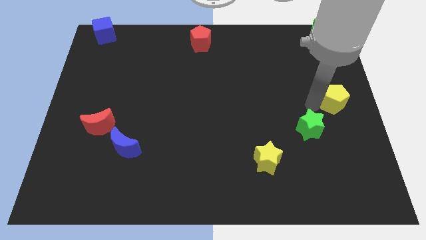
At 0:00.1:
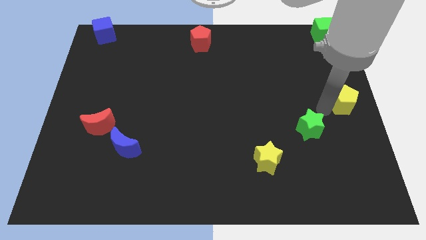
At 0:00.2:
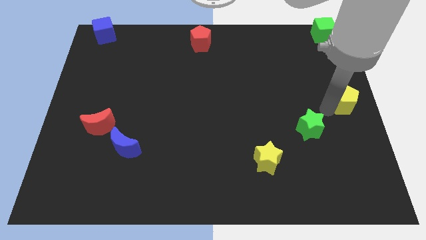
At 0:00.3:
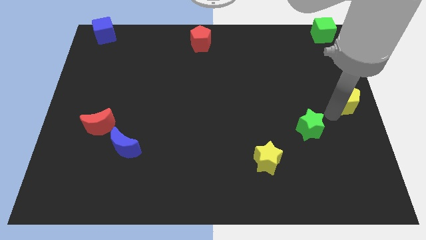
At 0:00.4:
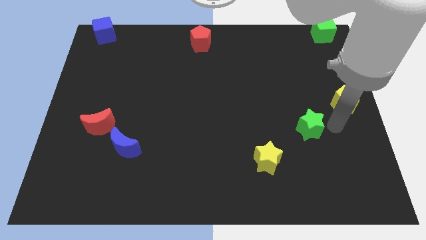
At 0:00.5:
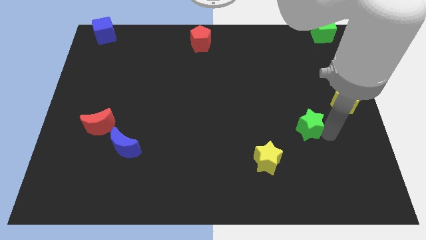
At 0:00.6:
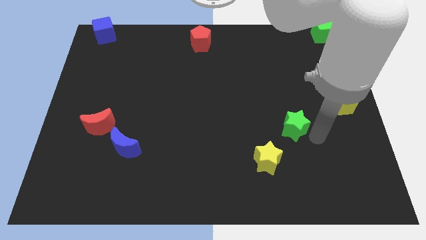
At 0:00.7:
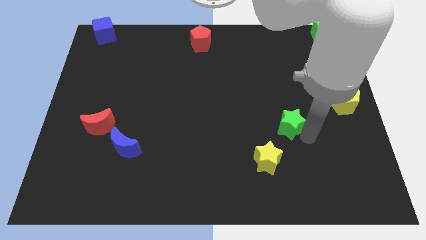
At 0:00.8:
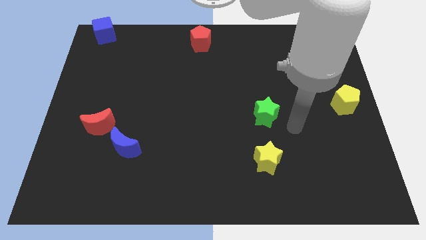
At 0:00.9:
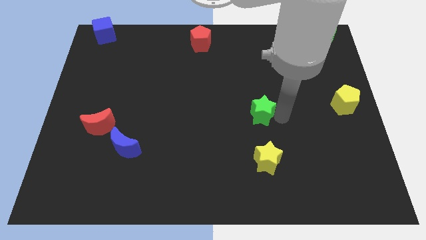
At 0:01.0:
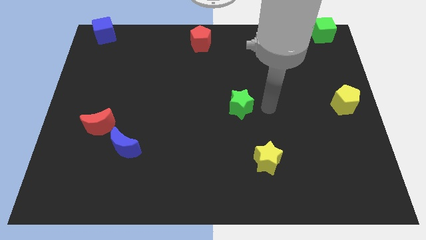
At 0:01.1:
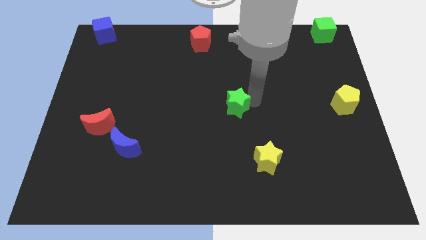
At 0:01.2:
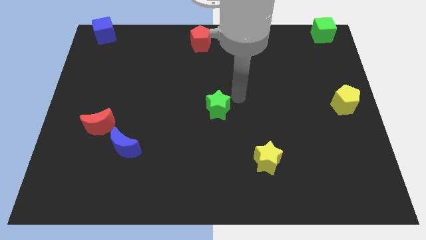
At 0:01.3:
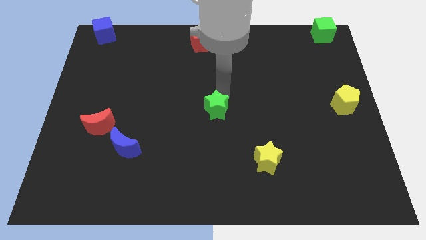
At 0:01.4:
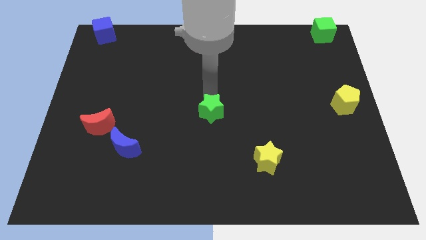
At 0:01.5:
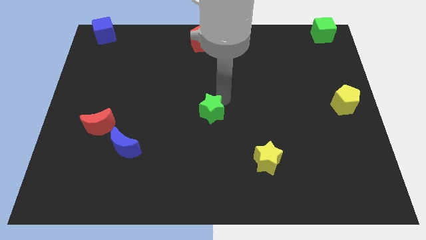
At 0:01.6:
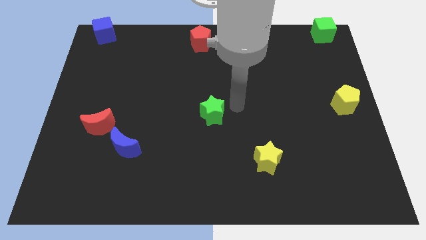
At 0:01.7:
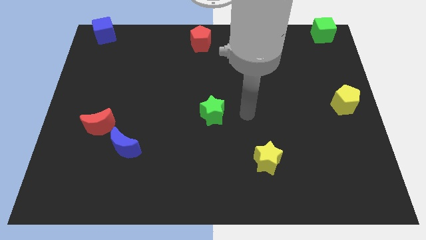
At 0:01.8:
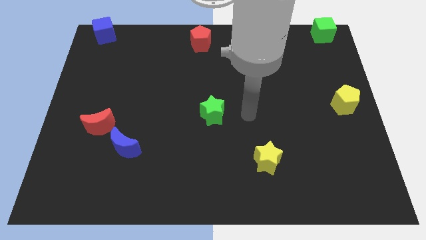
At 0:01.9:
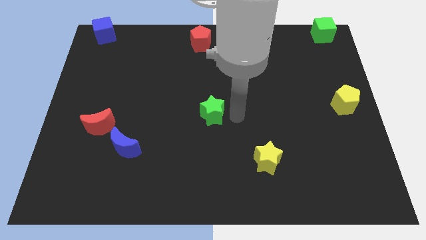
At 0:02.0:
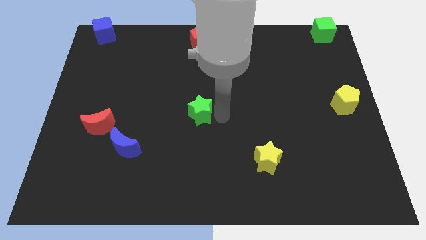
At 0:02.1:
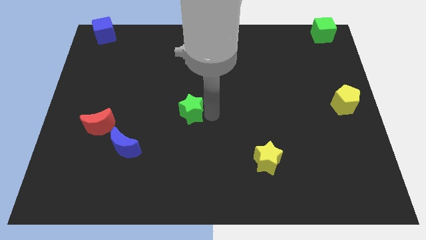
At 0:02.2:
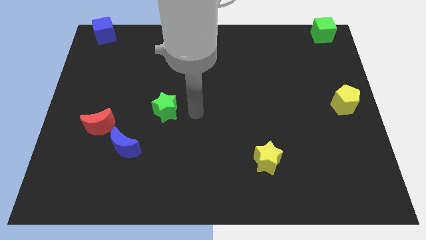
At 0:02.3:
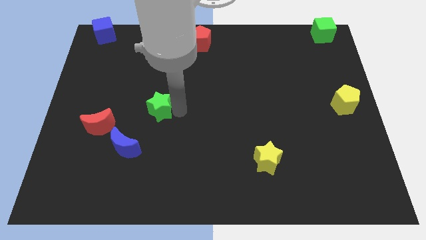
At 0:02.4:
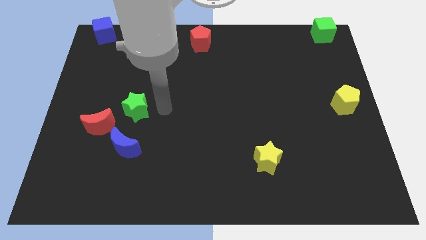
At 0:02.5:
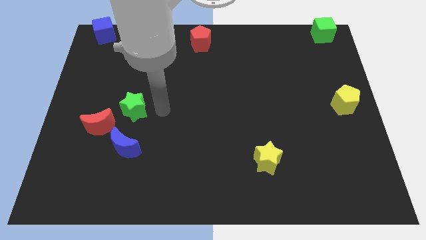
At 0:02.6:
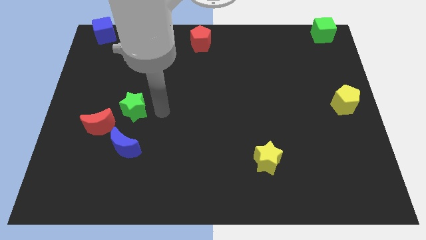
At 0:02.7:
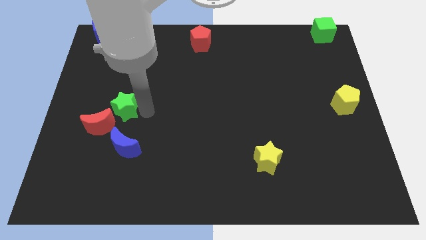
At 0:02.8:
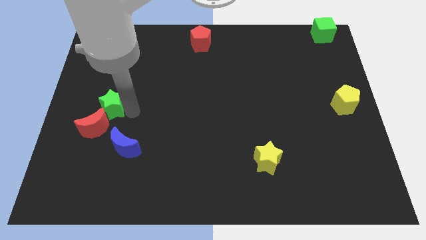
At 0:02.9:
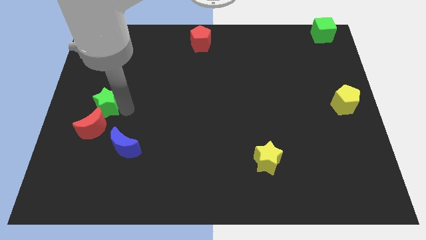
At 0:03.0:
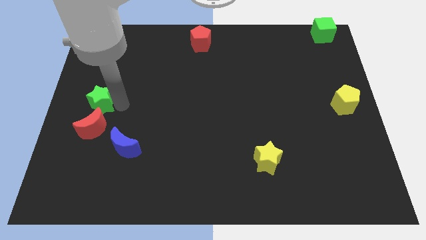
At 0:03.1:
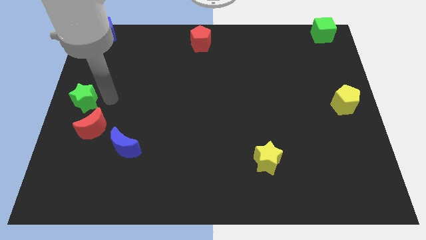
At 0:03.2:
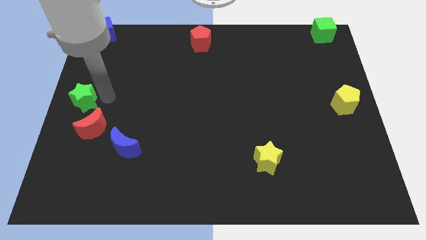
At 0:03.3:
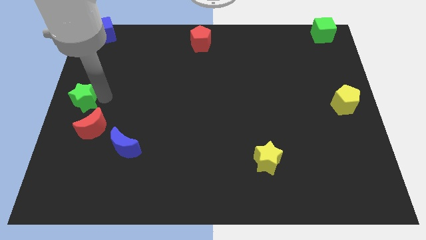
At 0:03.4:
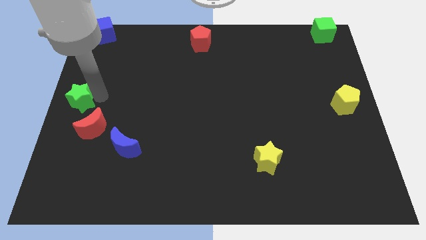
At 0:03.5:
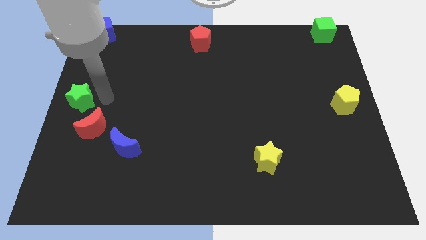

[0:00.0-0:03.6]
move the green star left center of the board

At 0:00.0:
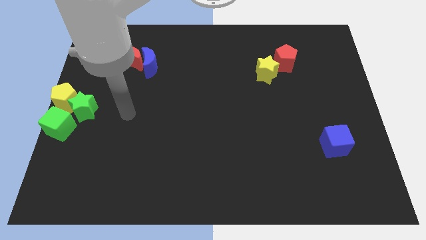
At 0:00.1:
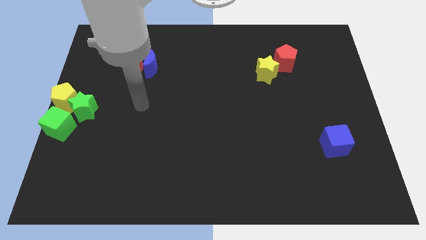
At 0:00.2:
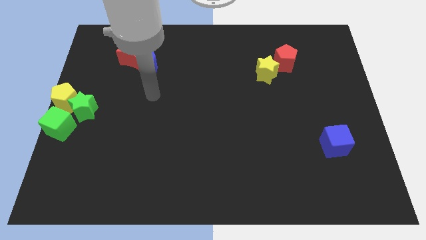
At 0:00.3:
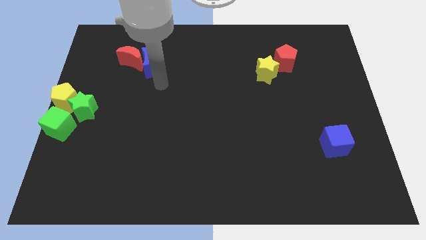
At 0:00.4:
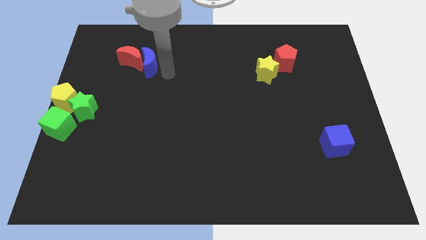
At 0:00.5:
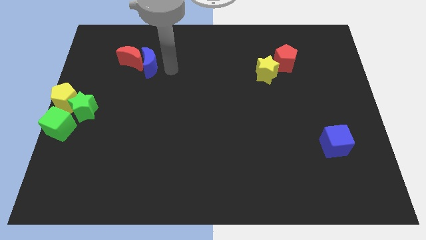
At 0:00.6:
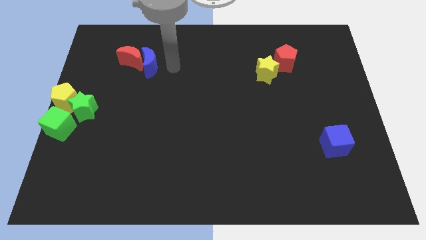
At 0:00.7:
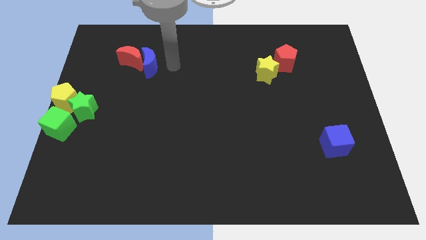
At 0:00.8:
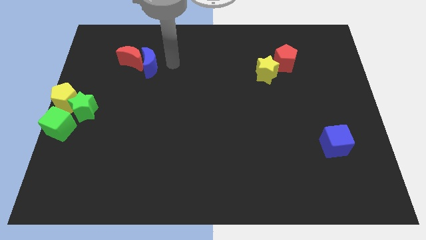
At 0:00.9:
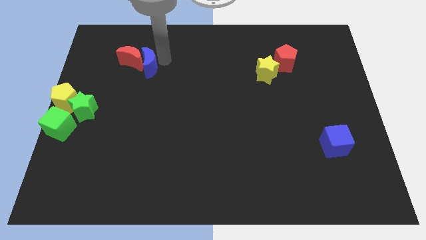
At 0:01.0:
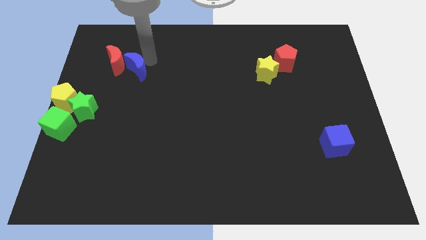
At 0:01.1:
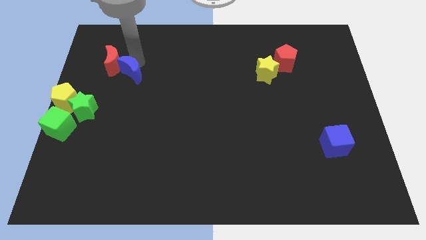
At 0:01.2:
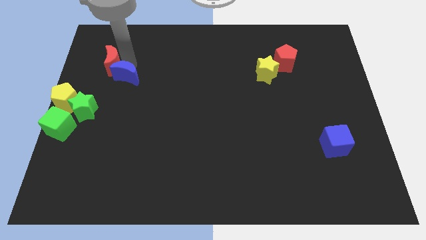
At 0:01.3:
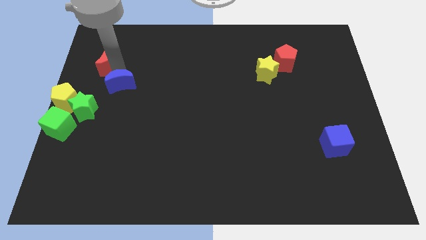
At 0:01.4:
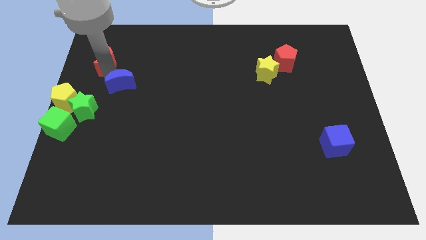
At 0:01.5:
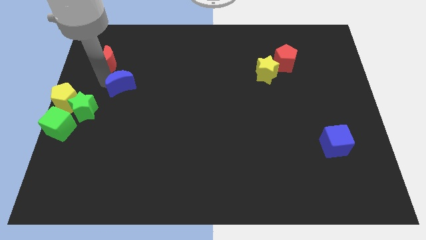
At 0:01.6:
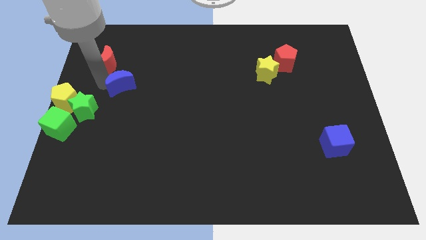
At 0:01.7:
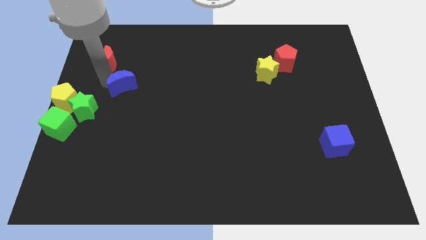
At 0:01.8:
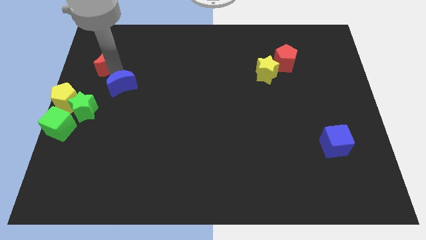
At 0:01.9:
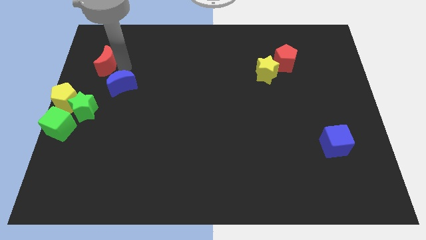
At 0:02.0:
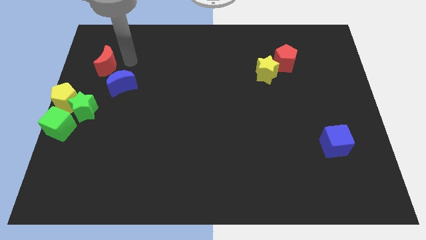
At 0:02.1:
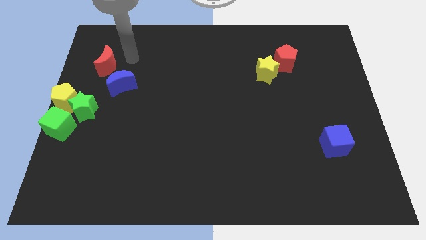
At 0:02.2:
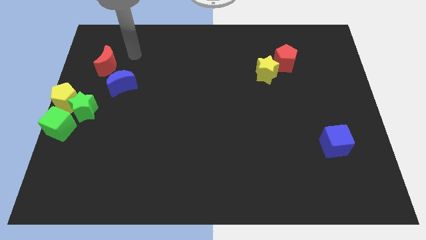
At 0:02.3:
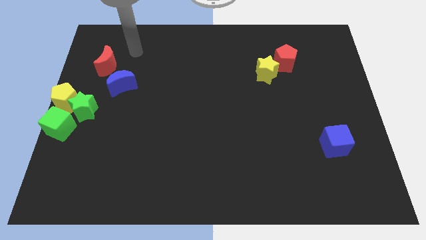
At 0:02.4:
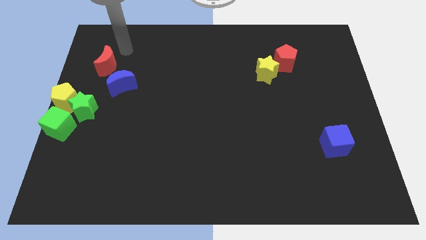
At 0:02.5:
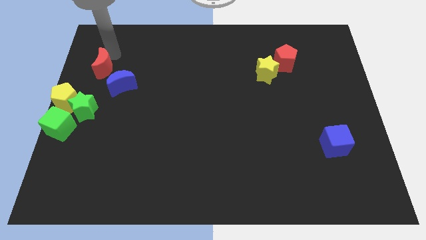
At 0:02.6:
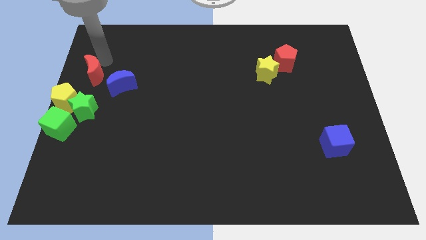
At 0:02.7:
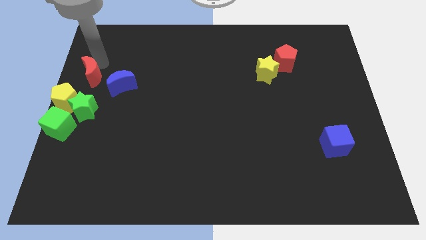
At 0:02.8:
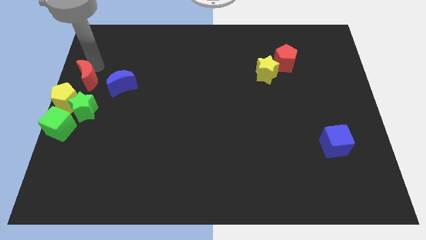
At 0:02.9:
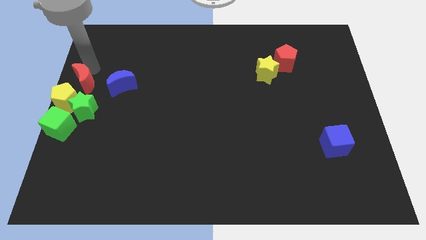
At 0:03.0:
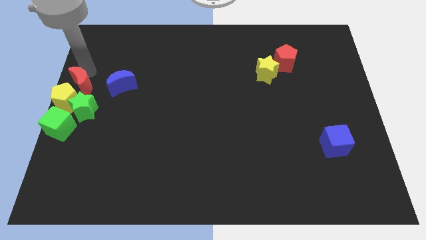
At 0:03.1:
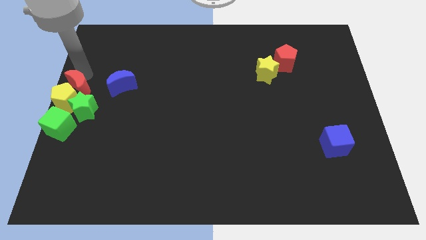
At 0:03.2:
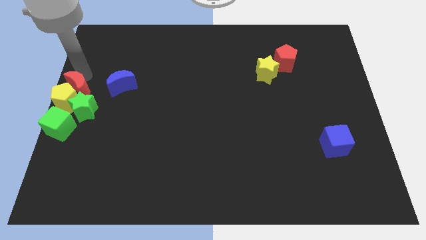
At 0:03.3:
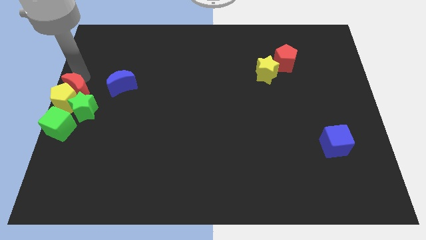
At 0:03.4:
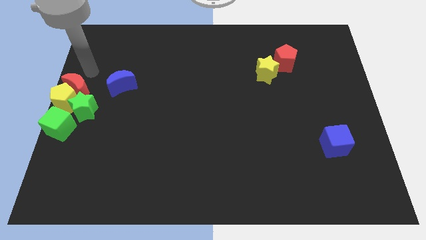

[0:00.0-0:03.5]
move the red crescent away from the blue moon

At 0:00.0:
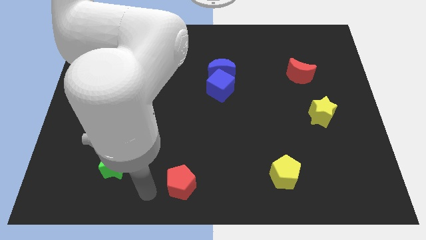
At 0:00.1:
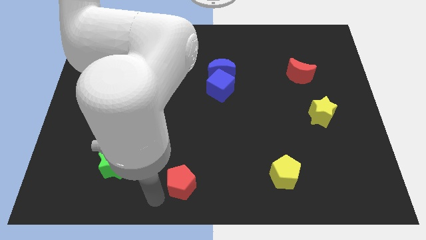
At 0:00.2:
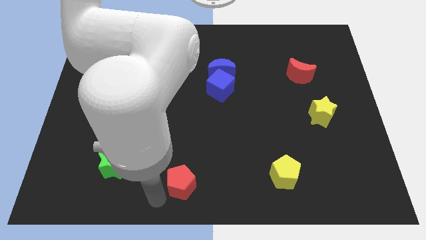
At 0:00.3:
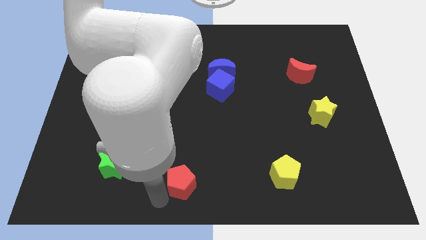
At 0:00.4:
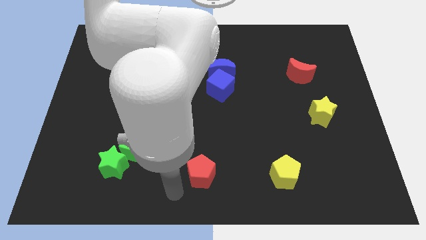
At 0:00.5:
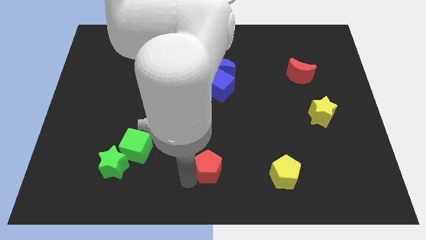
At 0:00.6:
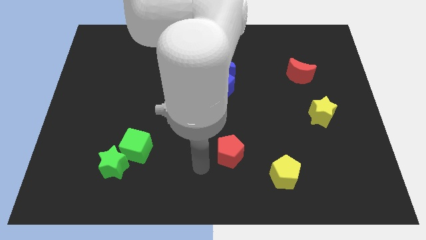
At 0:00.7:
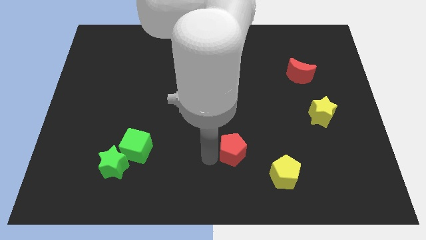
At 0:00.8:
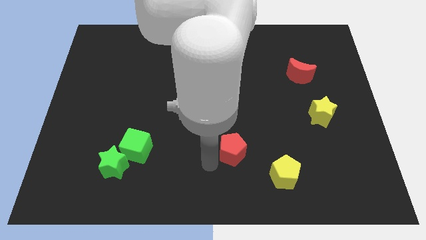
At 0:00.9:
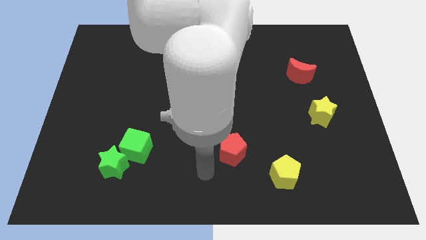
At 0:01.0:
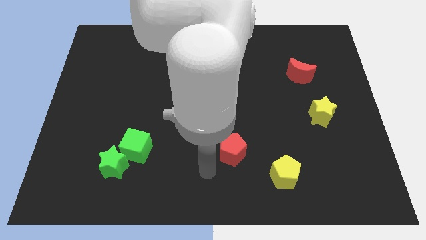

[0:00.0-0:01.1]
move the red pentagon to the right side of the green cube

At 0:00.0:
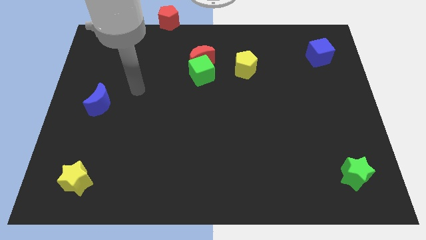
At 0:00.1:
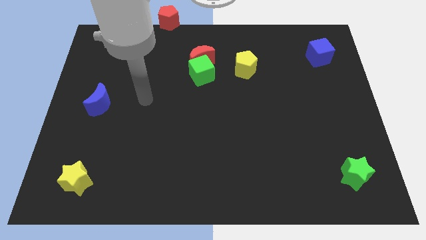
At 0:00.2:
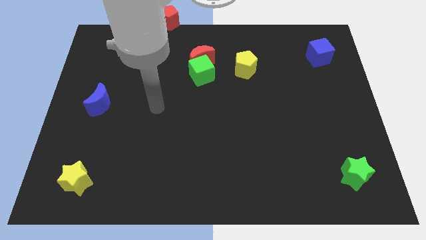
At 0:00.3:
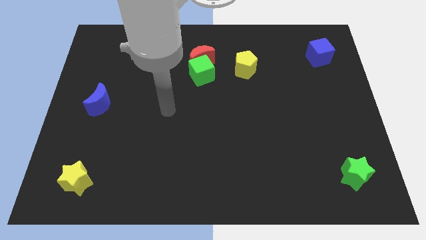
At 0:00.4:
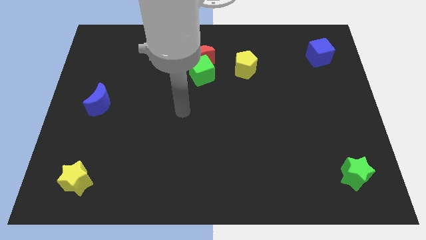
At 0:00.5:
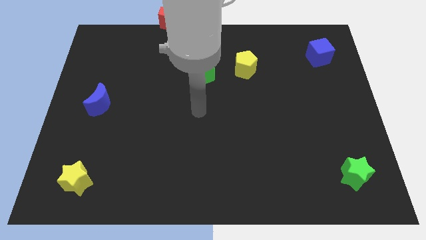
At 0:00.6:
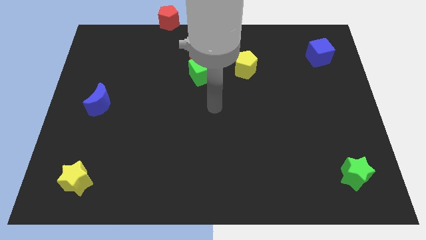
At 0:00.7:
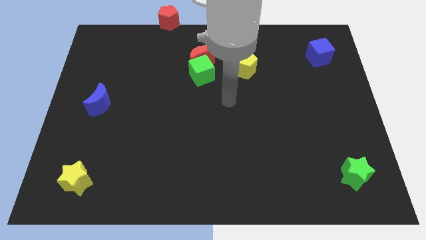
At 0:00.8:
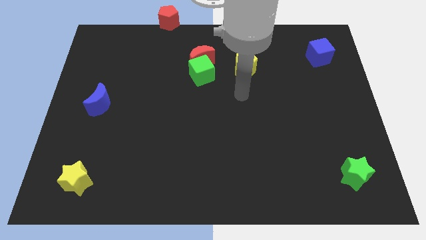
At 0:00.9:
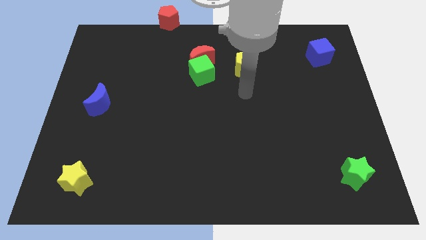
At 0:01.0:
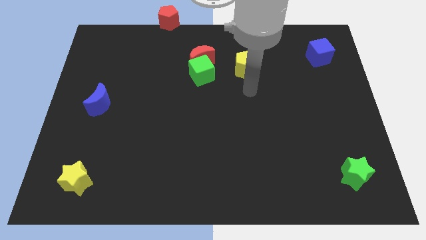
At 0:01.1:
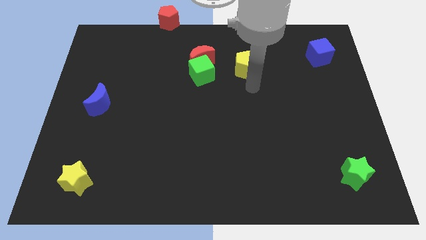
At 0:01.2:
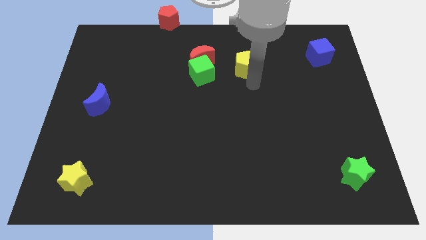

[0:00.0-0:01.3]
place your arm at the bottom of the yellow pentagon
